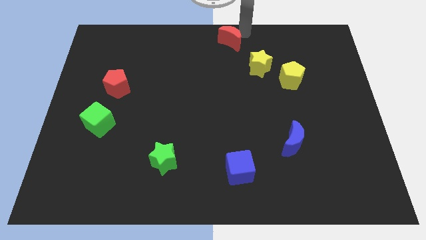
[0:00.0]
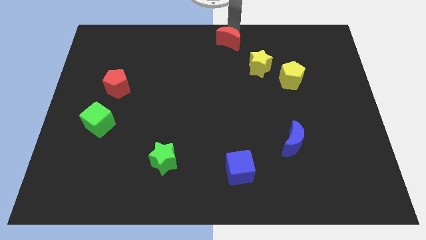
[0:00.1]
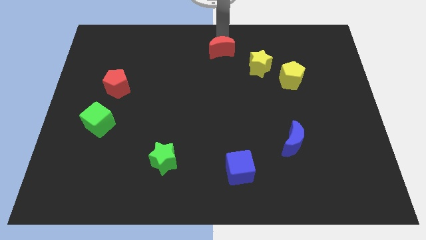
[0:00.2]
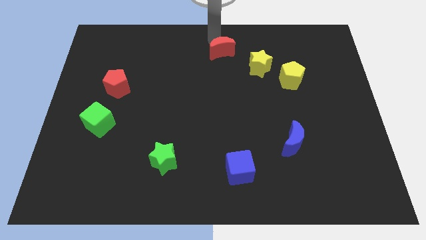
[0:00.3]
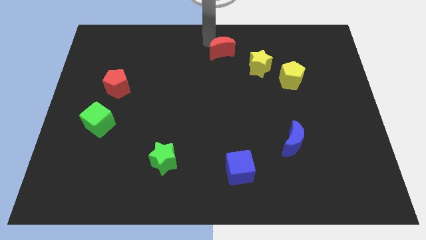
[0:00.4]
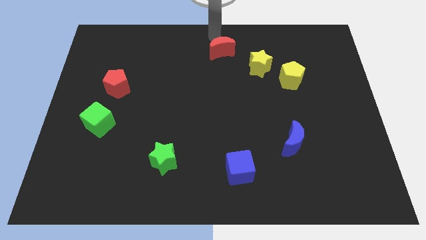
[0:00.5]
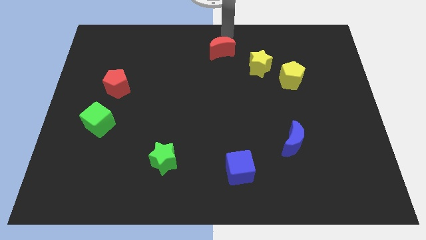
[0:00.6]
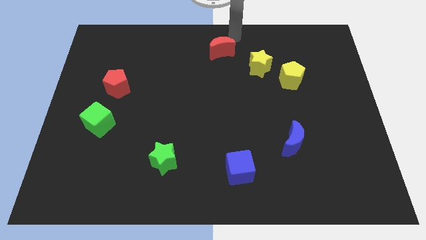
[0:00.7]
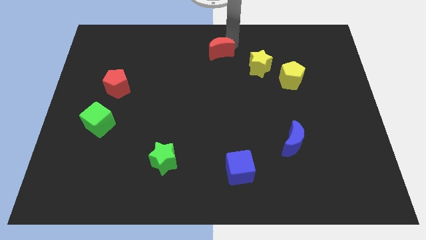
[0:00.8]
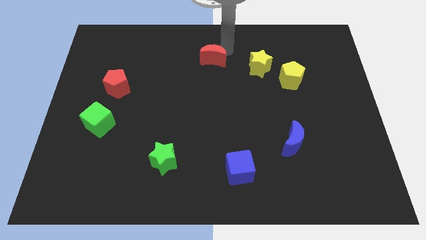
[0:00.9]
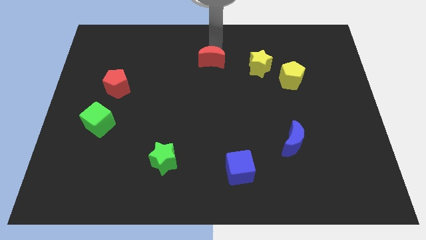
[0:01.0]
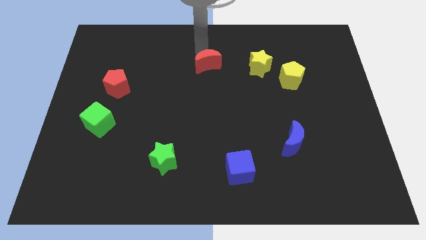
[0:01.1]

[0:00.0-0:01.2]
place the red crescent at the left of the yellow star

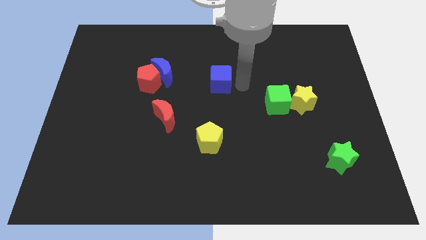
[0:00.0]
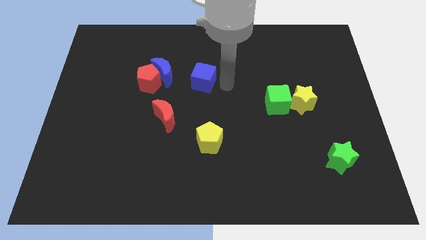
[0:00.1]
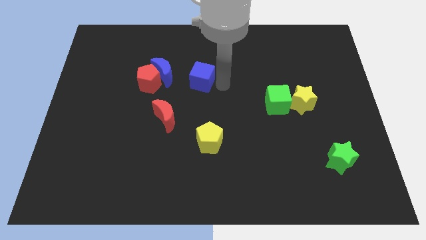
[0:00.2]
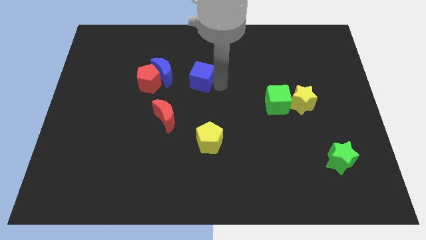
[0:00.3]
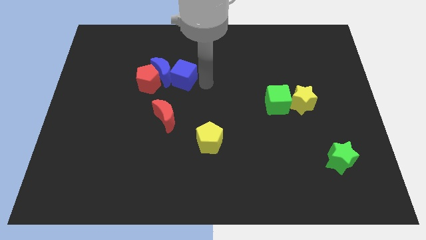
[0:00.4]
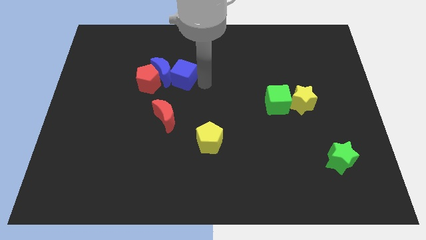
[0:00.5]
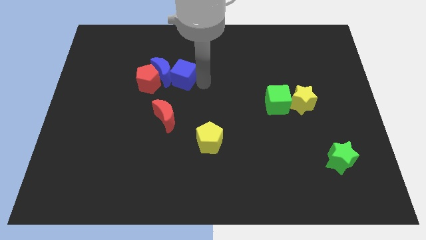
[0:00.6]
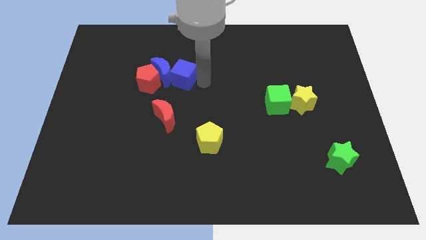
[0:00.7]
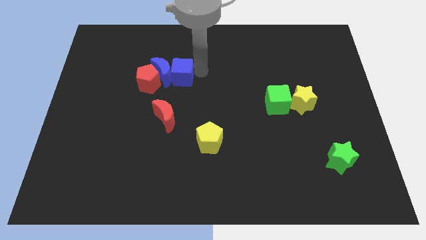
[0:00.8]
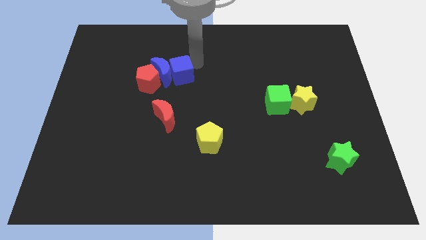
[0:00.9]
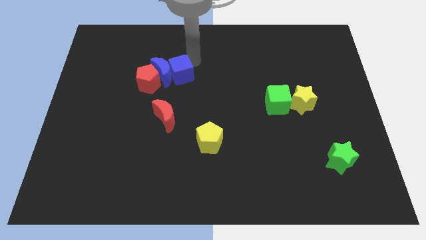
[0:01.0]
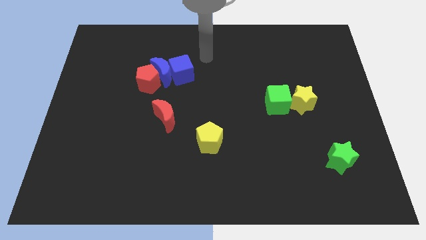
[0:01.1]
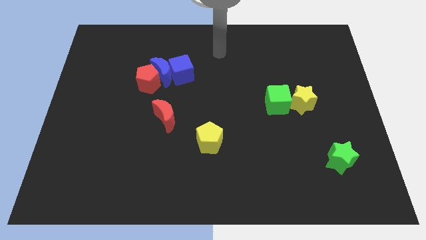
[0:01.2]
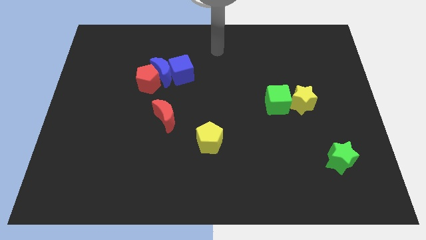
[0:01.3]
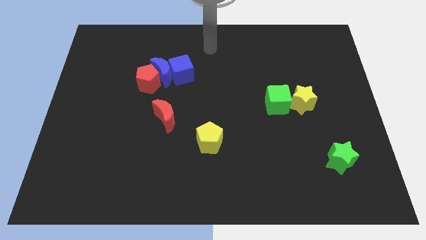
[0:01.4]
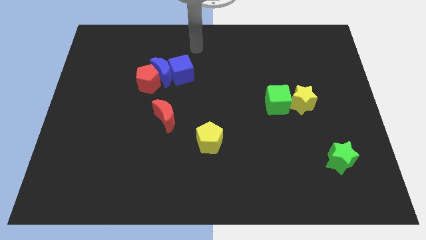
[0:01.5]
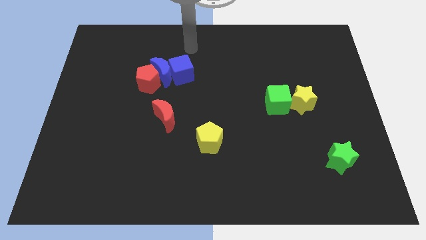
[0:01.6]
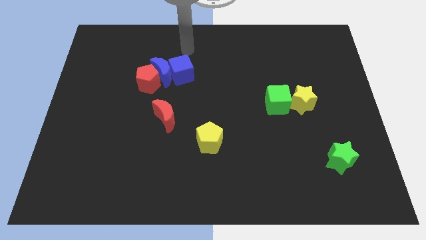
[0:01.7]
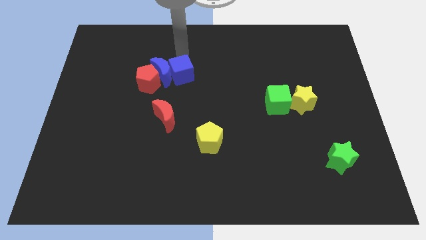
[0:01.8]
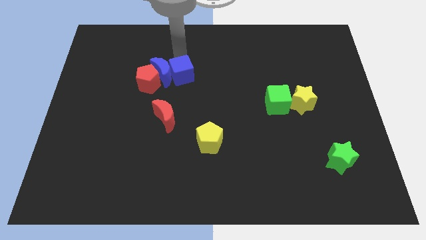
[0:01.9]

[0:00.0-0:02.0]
move the blue cube into the blue crescent

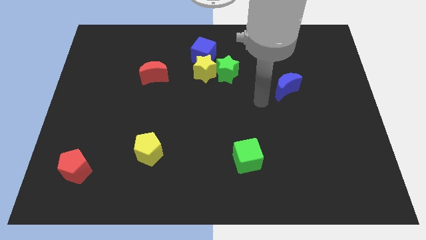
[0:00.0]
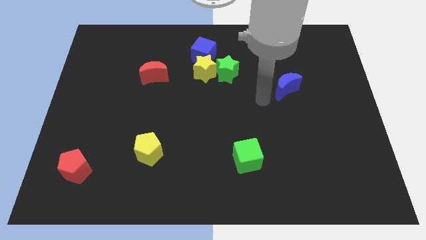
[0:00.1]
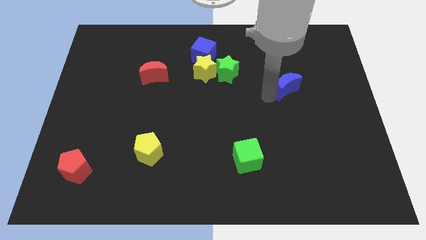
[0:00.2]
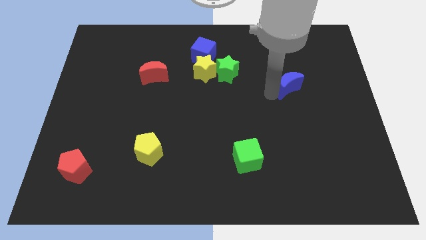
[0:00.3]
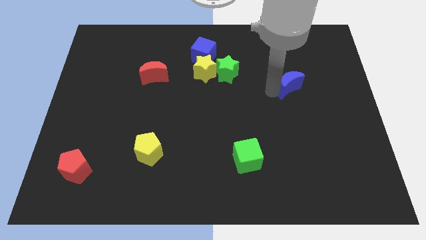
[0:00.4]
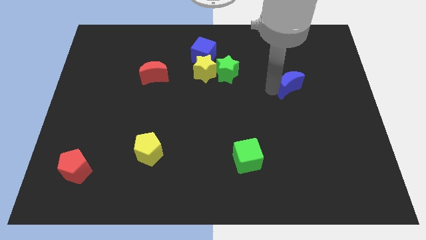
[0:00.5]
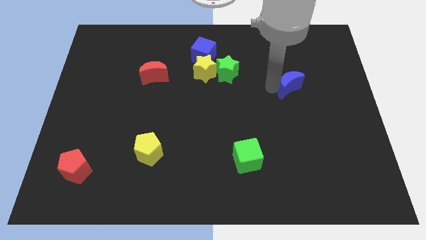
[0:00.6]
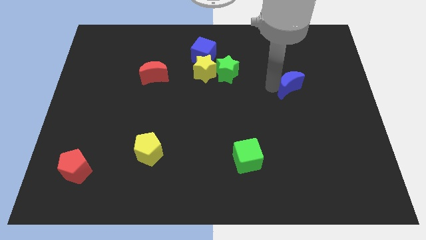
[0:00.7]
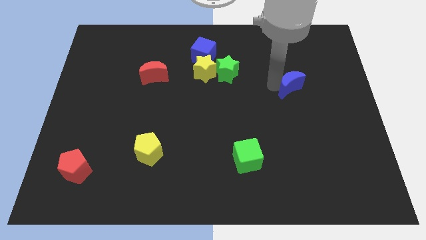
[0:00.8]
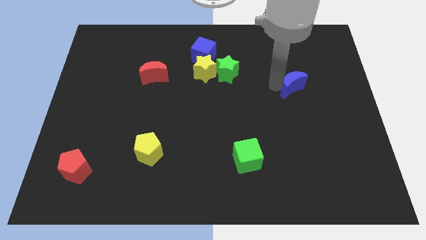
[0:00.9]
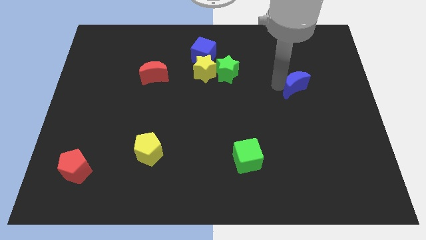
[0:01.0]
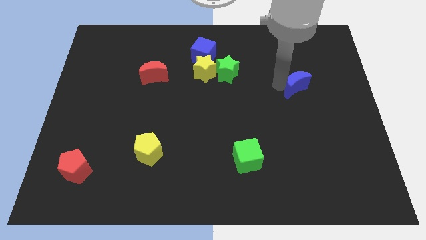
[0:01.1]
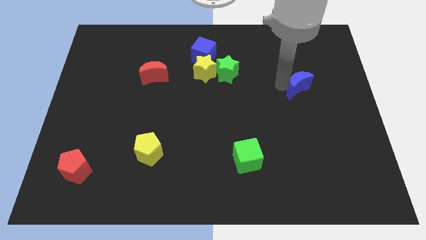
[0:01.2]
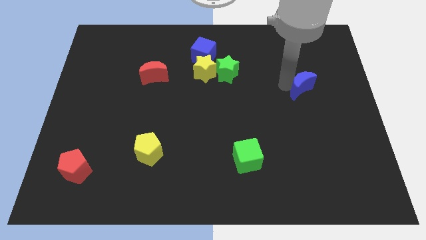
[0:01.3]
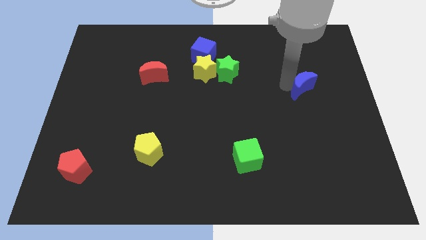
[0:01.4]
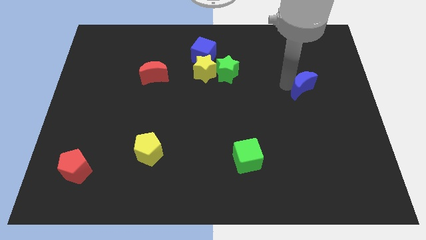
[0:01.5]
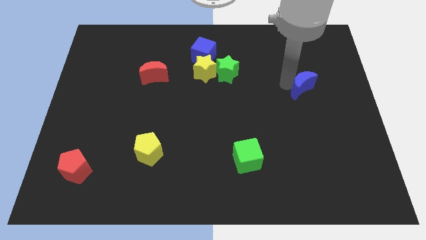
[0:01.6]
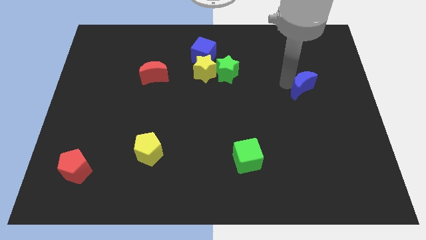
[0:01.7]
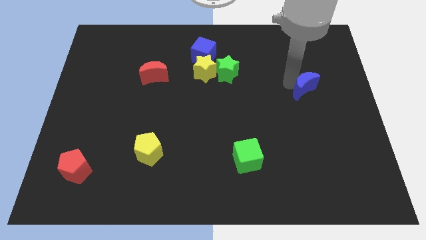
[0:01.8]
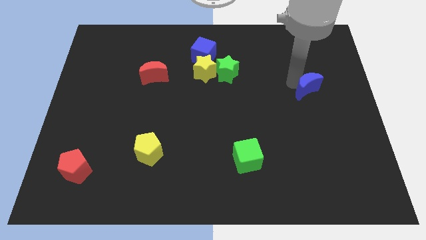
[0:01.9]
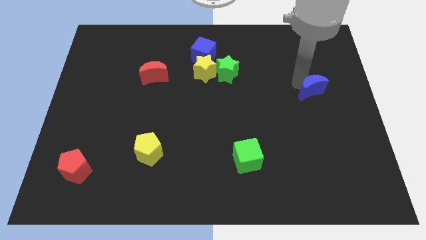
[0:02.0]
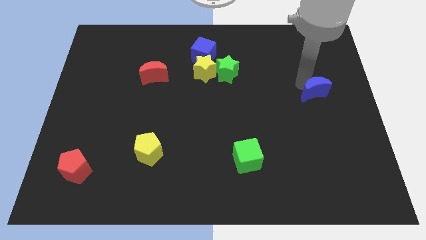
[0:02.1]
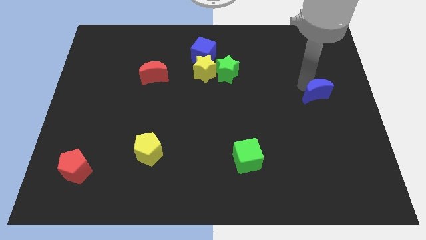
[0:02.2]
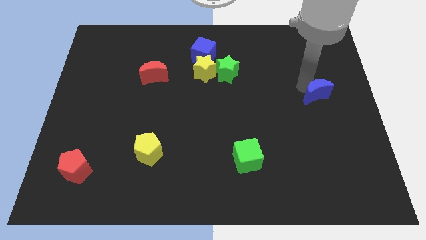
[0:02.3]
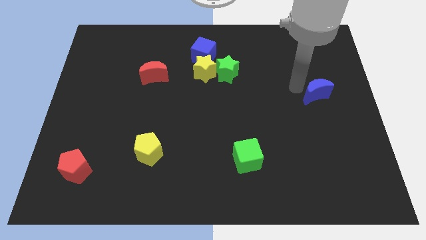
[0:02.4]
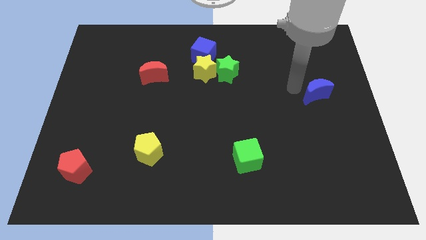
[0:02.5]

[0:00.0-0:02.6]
move the blue moon to the middle right

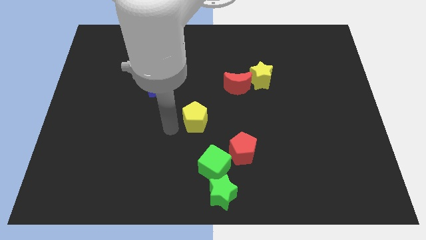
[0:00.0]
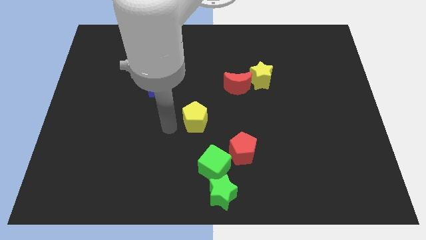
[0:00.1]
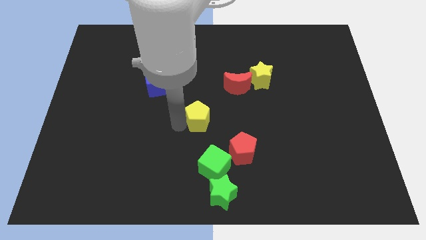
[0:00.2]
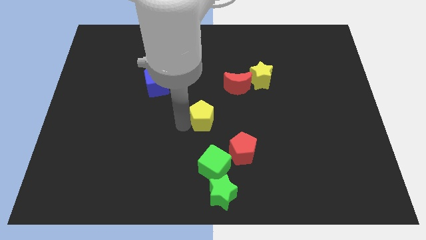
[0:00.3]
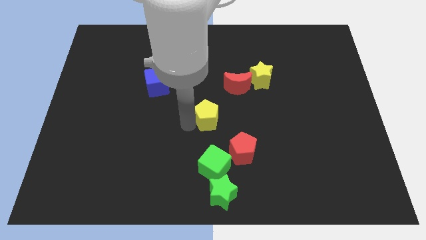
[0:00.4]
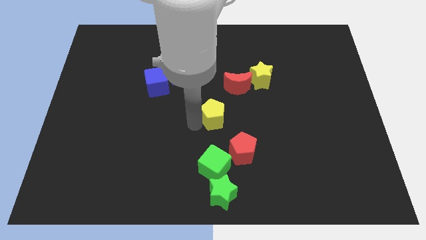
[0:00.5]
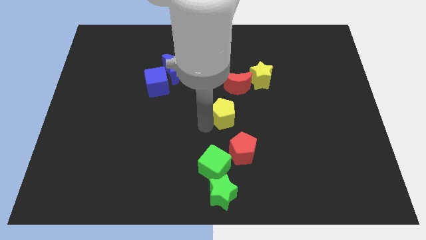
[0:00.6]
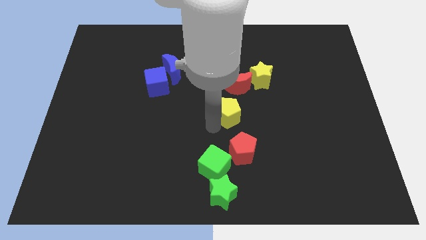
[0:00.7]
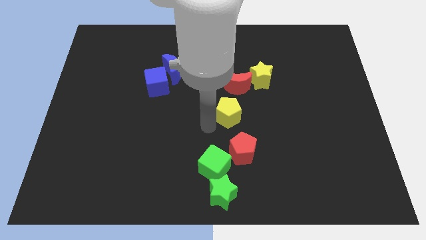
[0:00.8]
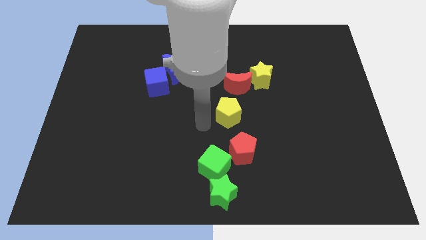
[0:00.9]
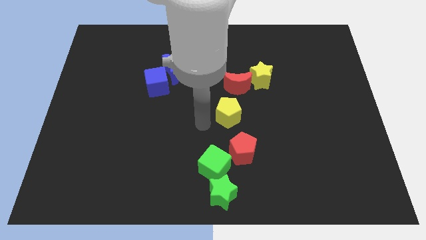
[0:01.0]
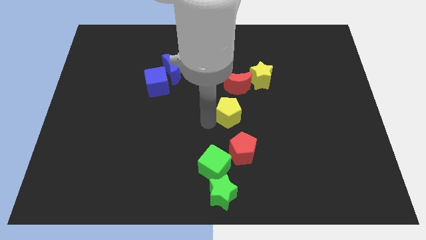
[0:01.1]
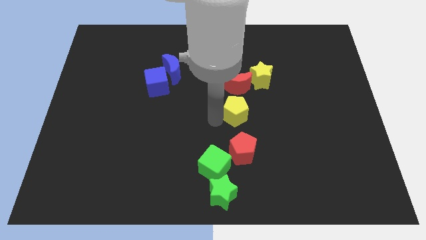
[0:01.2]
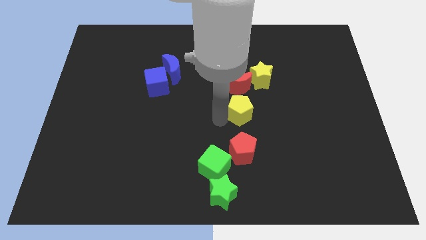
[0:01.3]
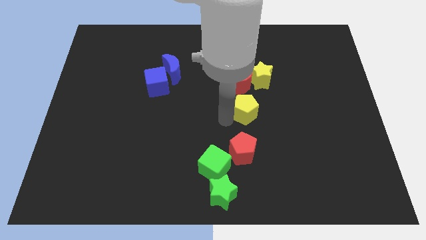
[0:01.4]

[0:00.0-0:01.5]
push the yellow pentagon to the top of the red pentagon

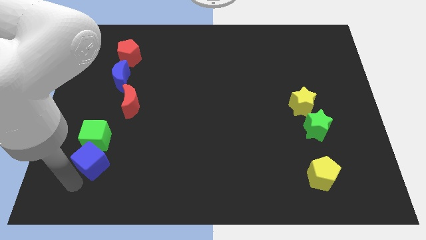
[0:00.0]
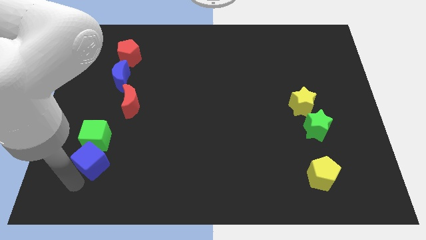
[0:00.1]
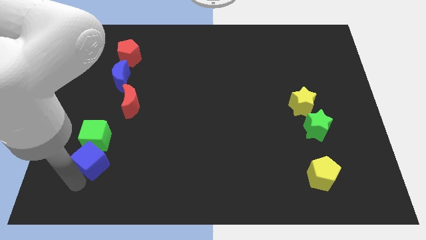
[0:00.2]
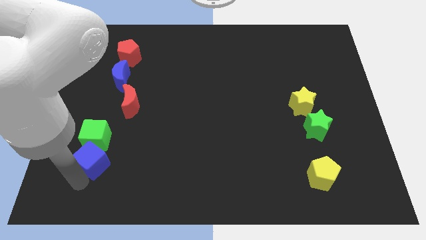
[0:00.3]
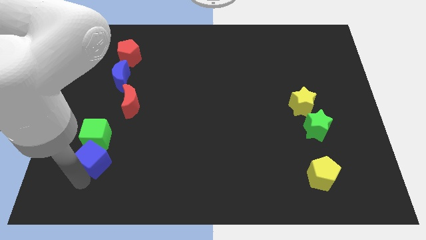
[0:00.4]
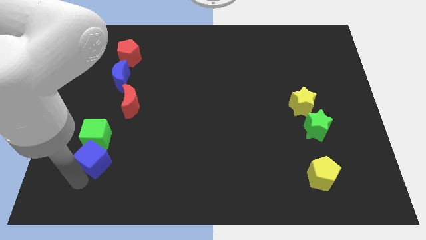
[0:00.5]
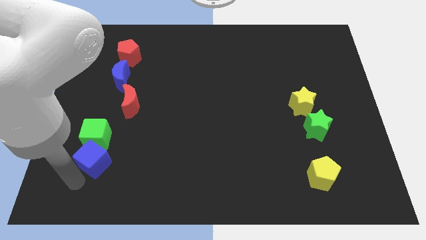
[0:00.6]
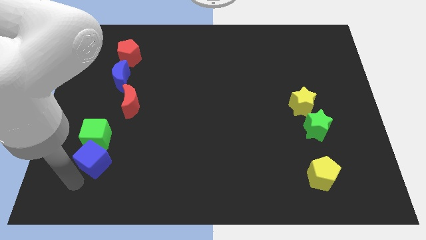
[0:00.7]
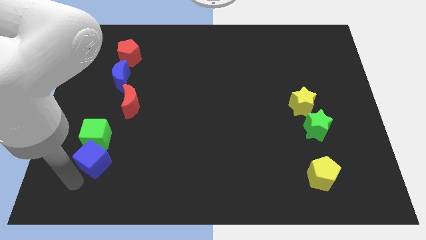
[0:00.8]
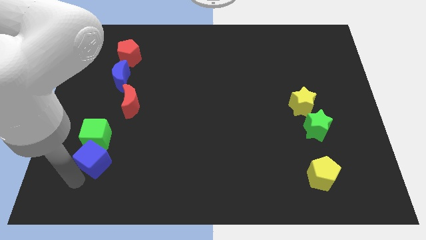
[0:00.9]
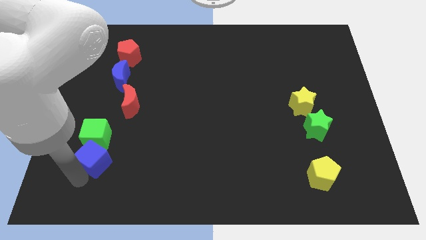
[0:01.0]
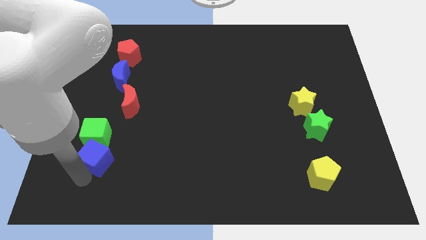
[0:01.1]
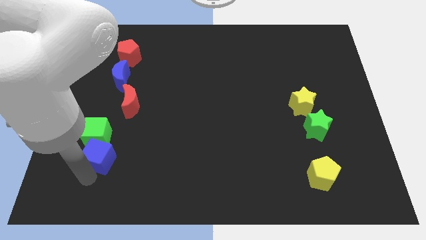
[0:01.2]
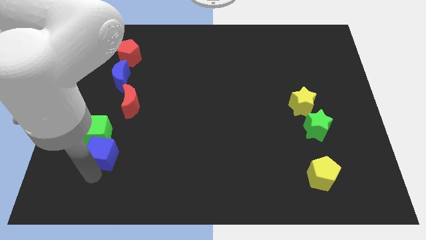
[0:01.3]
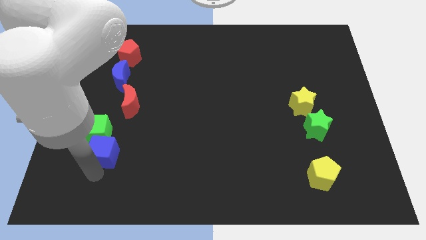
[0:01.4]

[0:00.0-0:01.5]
push blue cube into the green cube
